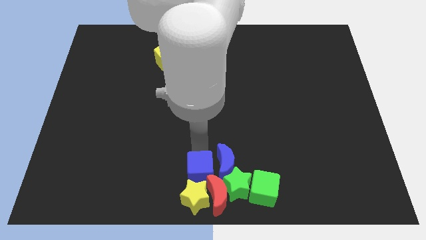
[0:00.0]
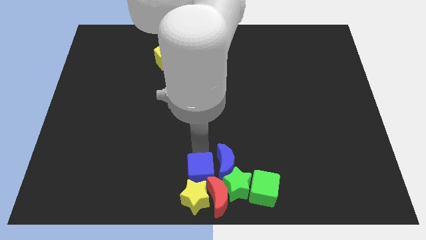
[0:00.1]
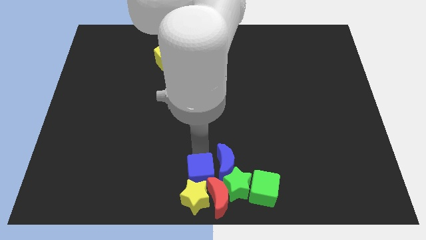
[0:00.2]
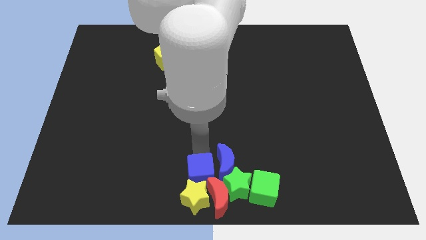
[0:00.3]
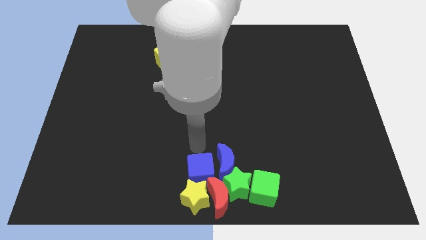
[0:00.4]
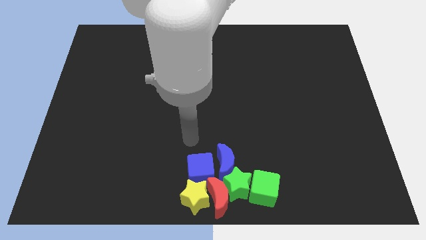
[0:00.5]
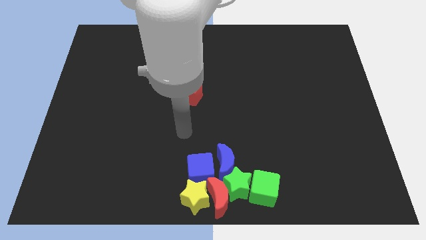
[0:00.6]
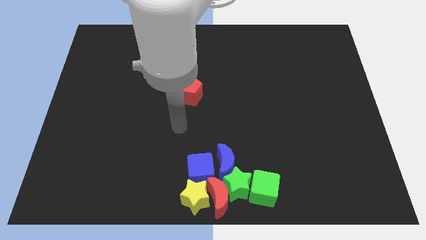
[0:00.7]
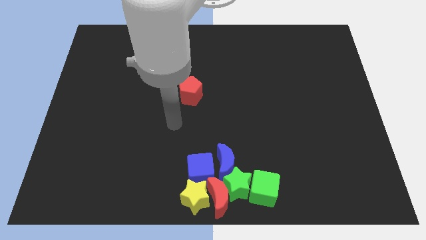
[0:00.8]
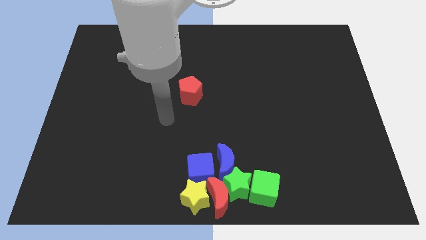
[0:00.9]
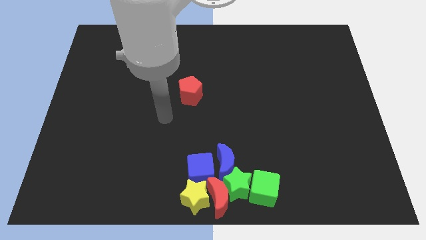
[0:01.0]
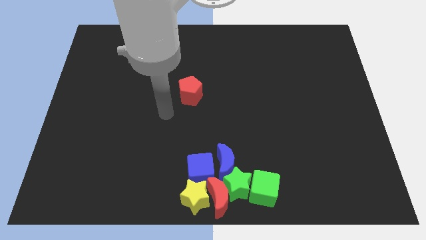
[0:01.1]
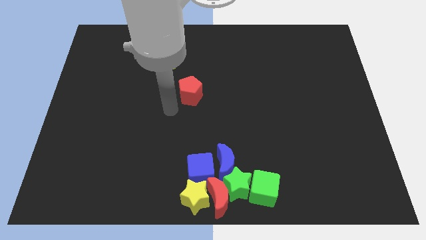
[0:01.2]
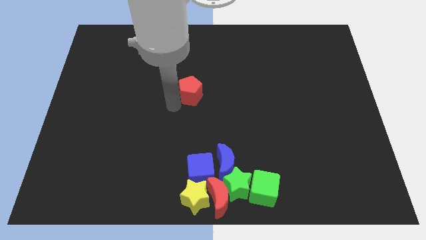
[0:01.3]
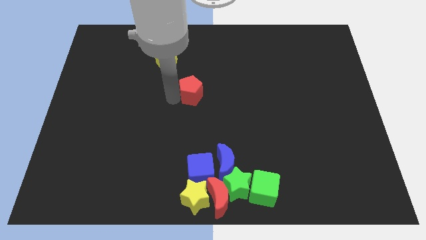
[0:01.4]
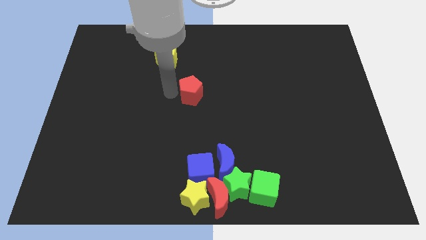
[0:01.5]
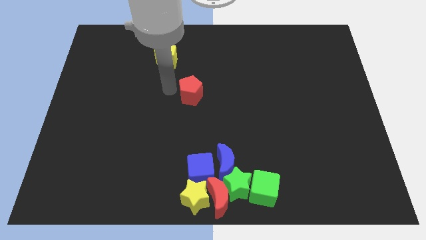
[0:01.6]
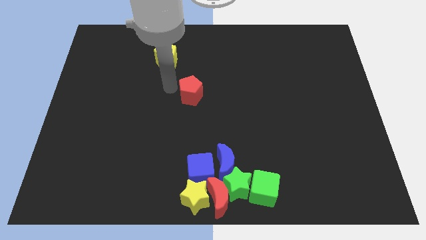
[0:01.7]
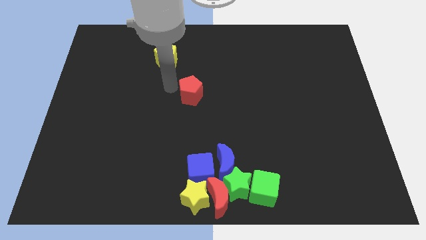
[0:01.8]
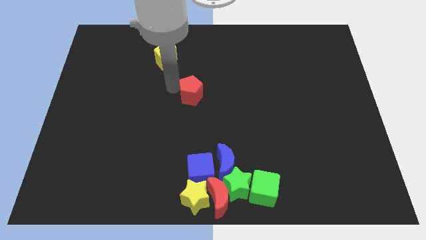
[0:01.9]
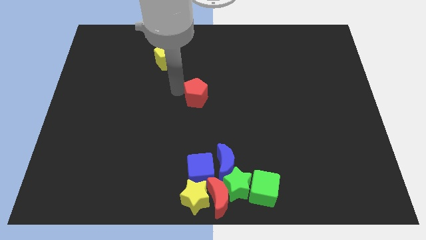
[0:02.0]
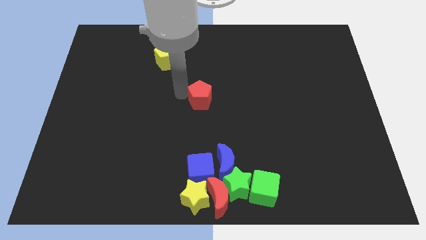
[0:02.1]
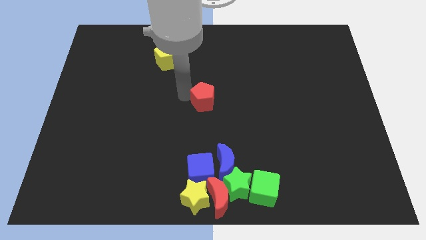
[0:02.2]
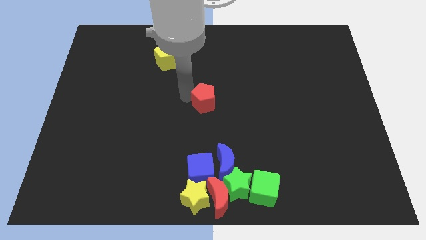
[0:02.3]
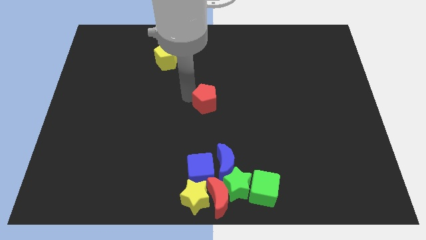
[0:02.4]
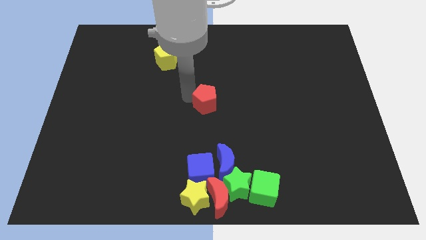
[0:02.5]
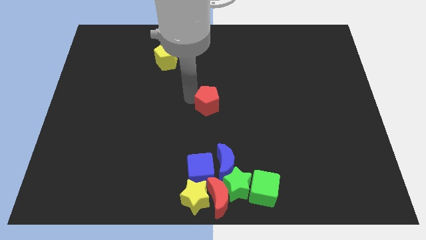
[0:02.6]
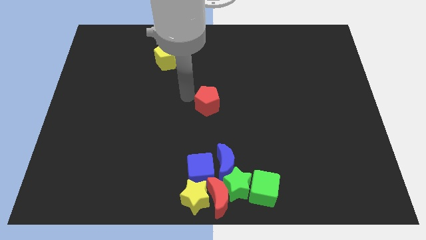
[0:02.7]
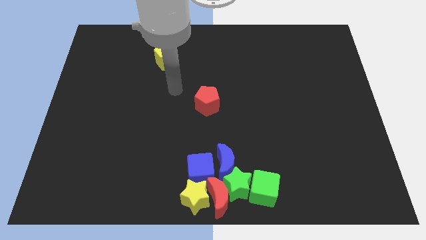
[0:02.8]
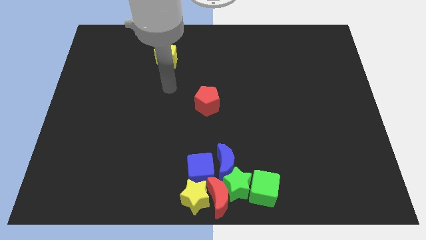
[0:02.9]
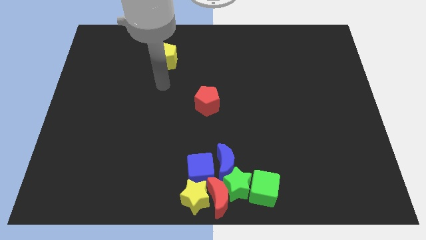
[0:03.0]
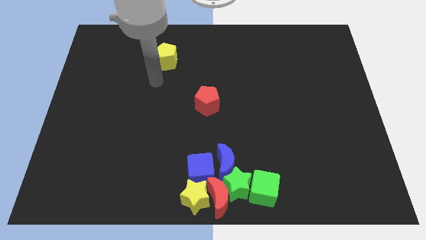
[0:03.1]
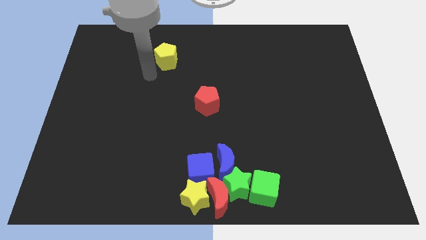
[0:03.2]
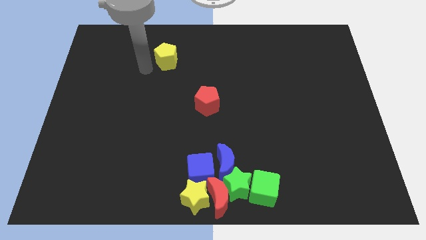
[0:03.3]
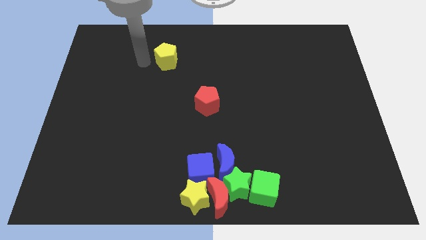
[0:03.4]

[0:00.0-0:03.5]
slightly move the red pentagon to the center of the board

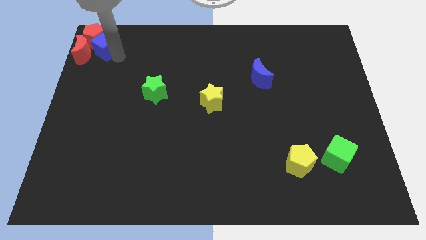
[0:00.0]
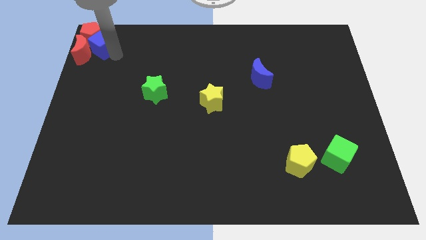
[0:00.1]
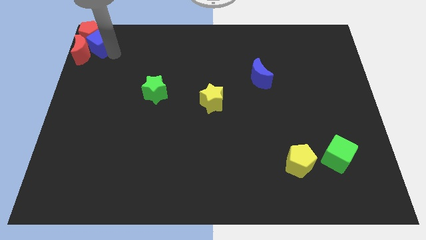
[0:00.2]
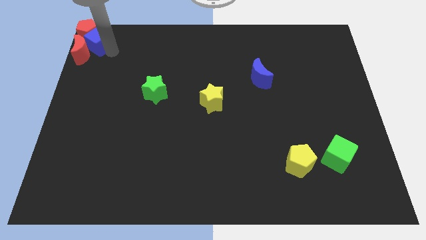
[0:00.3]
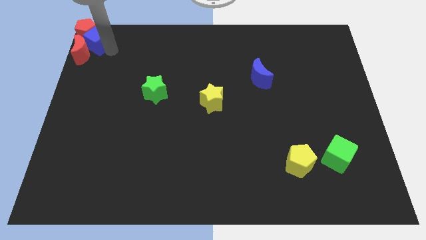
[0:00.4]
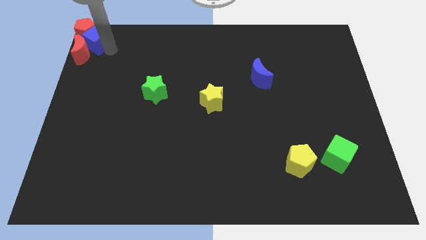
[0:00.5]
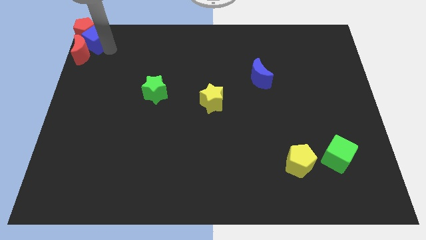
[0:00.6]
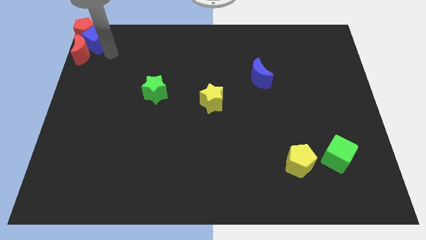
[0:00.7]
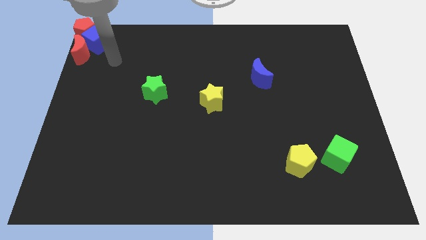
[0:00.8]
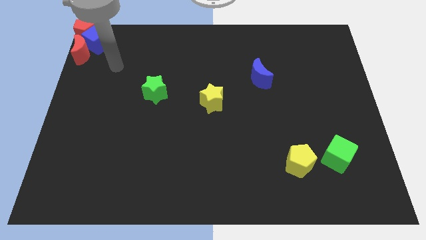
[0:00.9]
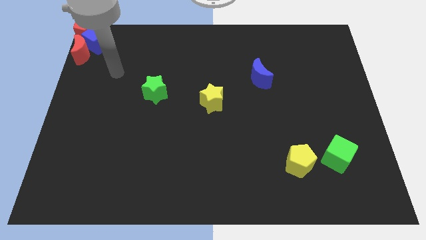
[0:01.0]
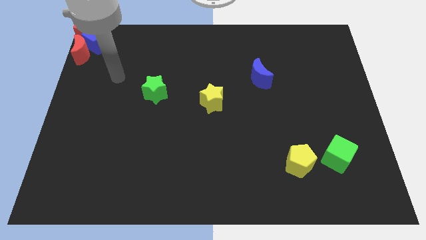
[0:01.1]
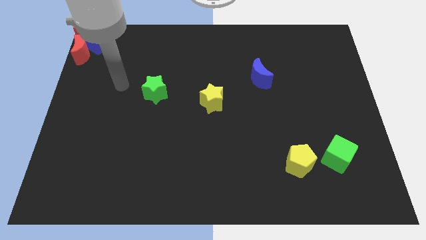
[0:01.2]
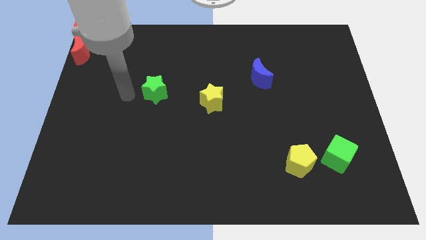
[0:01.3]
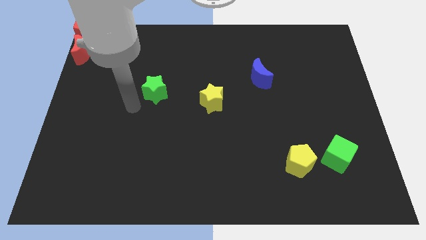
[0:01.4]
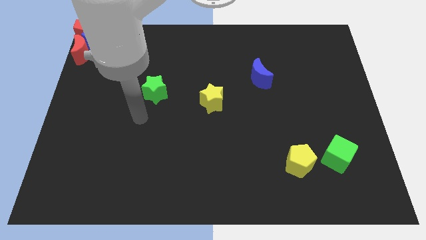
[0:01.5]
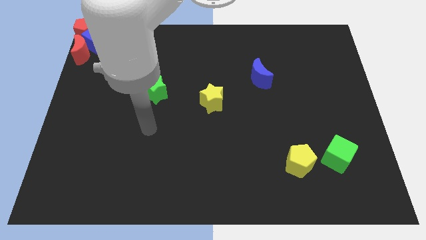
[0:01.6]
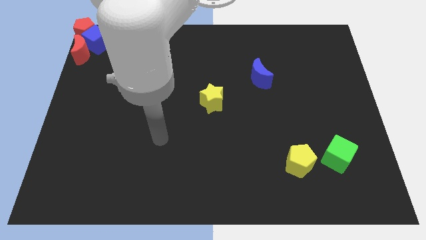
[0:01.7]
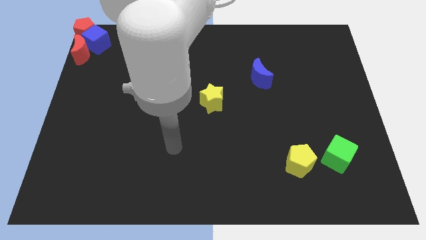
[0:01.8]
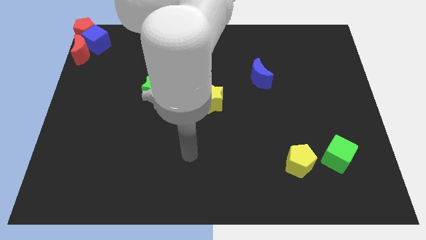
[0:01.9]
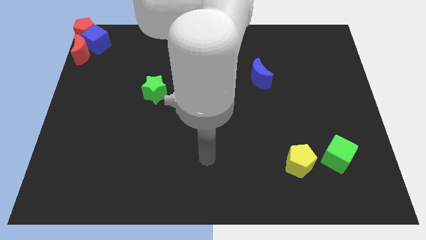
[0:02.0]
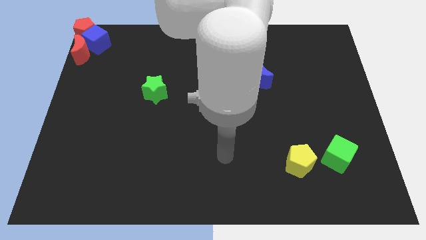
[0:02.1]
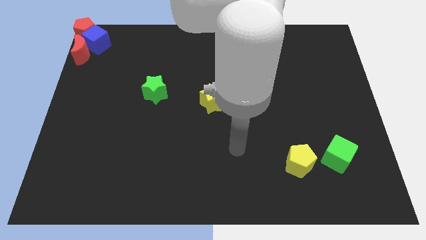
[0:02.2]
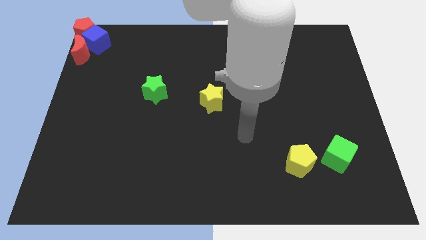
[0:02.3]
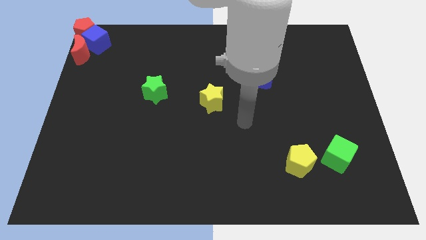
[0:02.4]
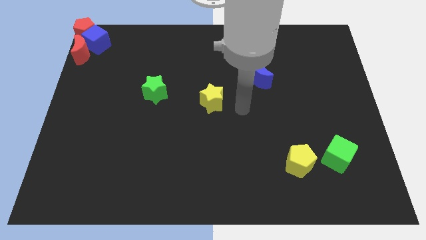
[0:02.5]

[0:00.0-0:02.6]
slightly push the blue cube into the red pentagon

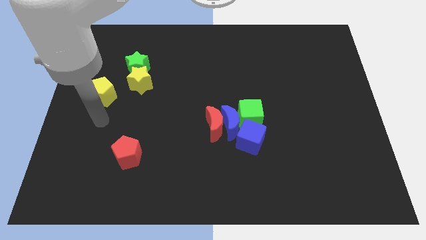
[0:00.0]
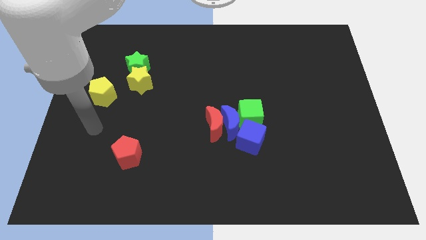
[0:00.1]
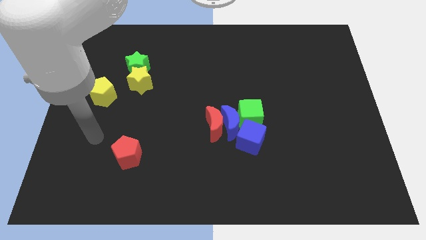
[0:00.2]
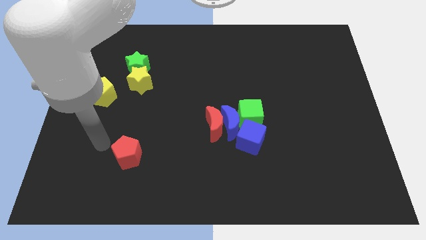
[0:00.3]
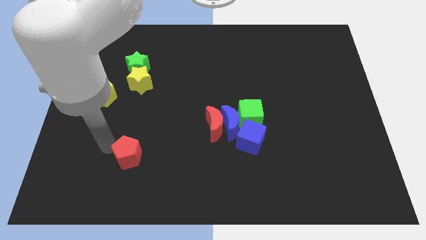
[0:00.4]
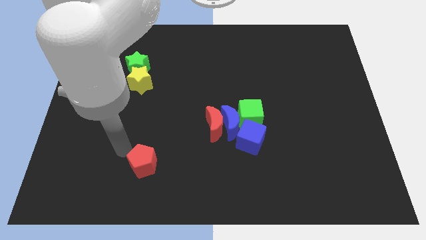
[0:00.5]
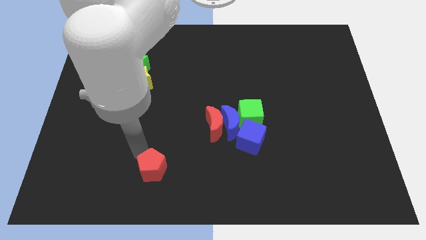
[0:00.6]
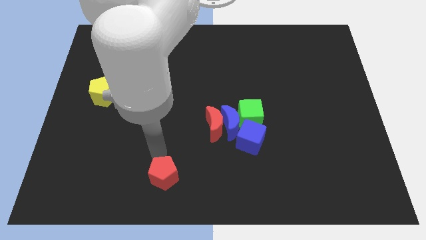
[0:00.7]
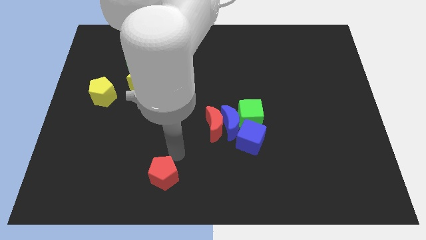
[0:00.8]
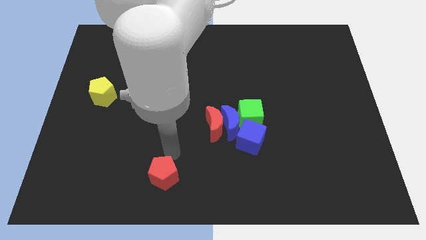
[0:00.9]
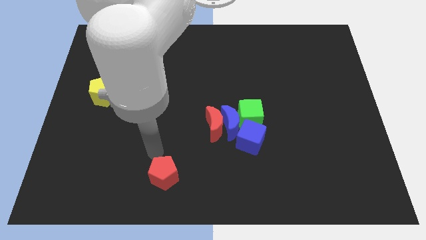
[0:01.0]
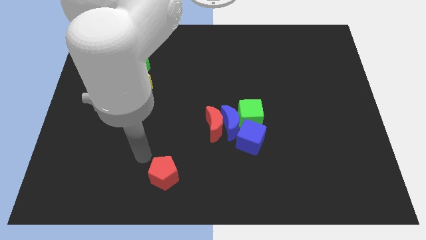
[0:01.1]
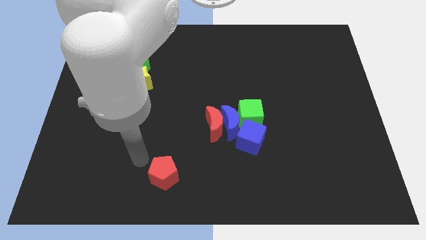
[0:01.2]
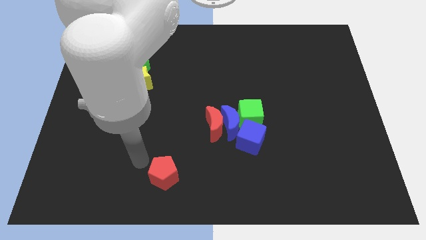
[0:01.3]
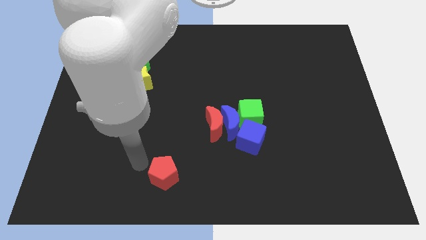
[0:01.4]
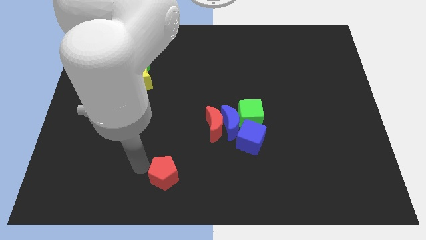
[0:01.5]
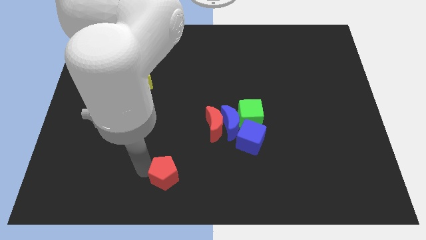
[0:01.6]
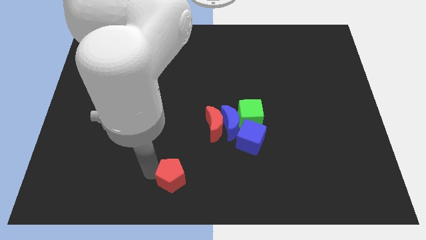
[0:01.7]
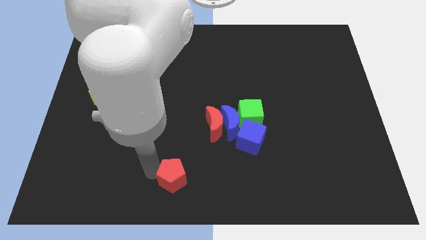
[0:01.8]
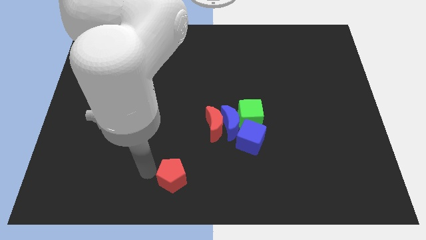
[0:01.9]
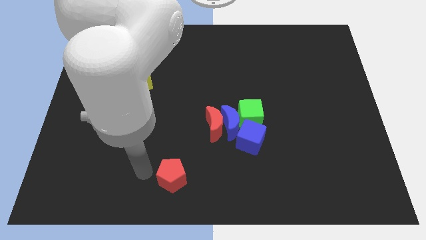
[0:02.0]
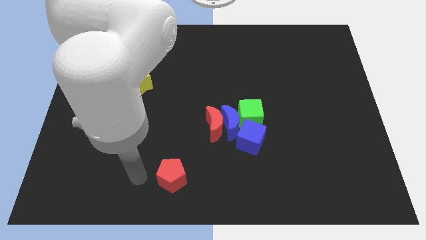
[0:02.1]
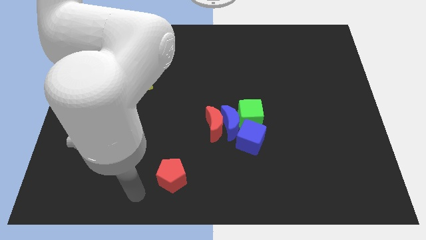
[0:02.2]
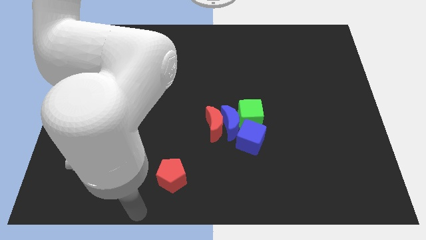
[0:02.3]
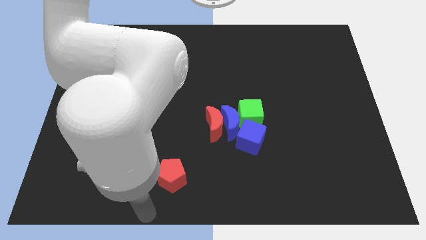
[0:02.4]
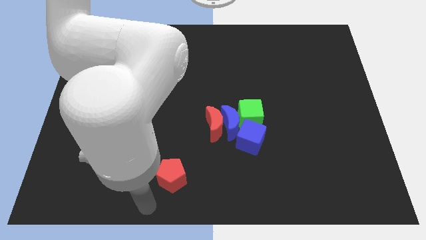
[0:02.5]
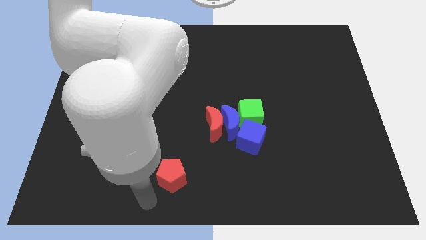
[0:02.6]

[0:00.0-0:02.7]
slide the red pentagon diagonal bottom left to red moon

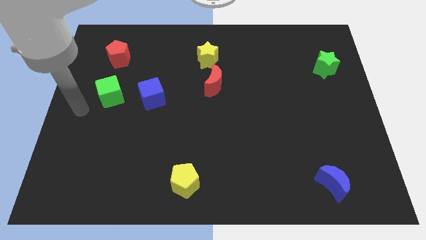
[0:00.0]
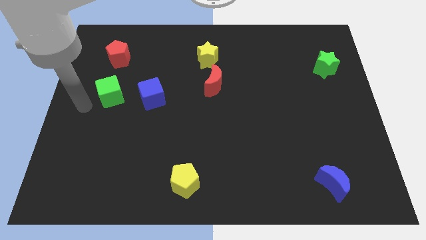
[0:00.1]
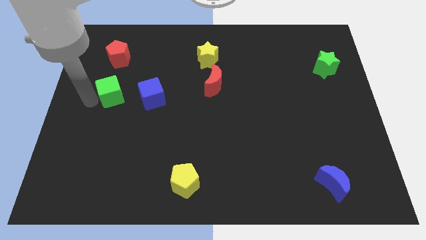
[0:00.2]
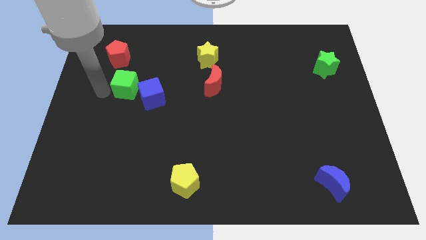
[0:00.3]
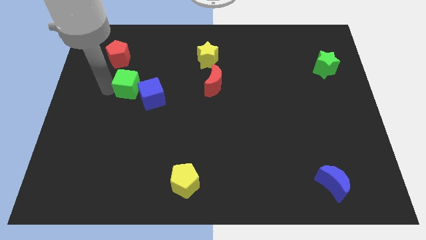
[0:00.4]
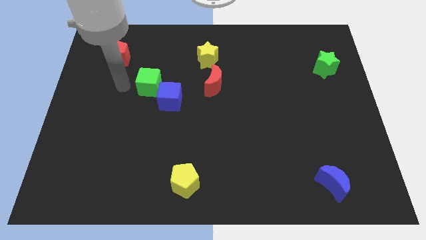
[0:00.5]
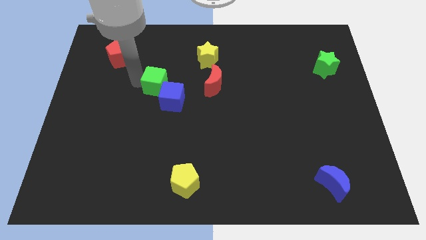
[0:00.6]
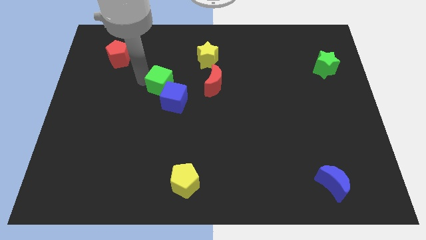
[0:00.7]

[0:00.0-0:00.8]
push the green cube into the right side of the blue cube
